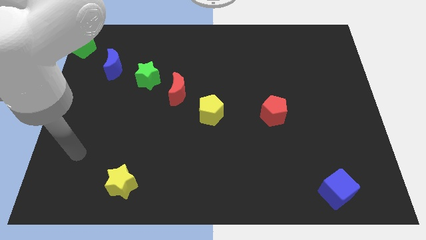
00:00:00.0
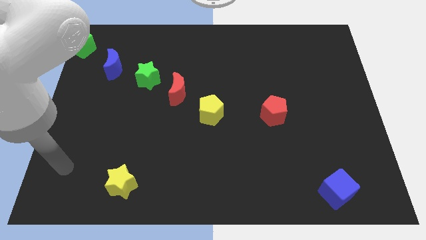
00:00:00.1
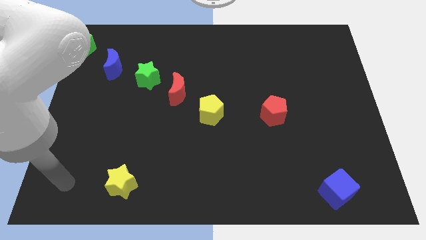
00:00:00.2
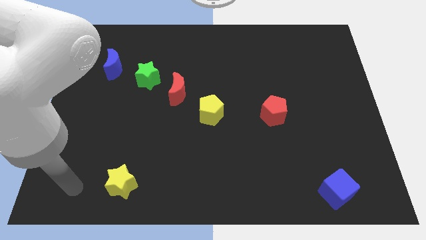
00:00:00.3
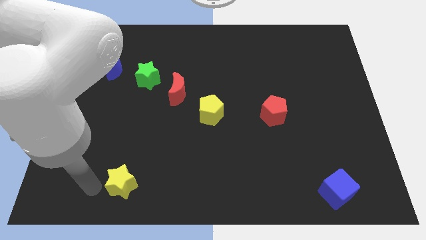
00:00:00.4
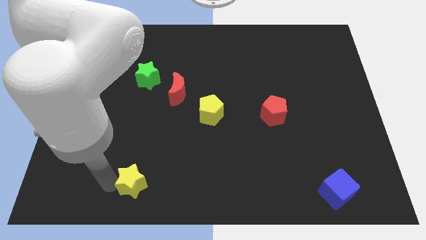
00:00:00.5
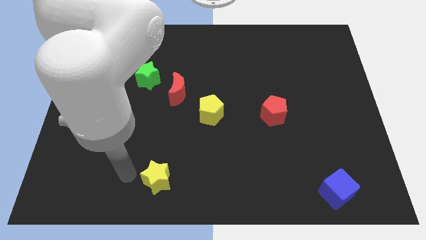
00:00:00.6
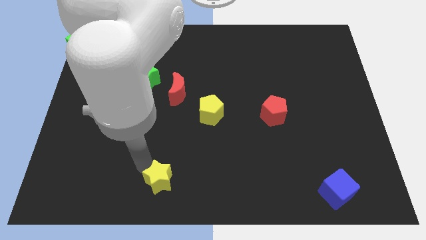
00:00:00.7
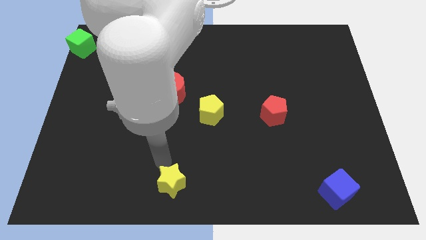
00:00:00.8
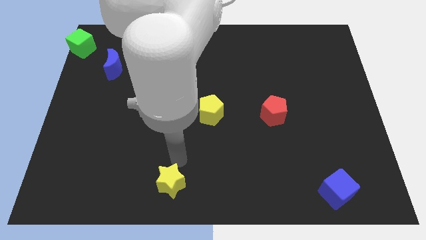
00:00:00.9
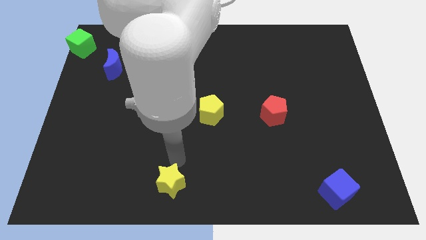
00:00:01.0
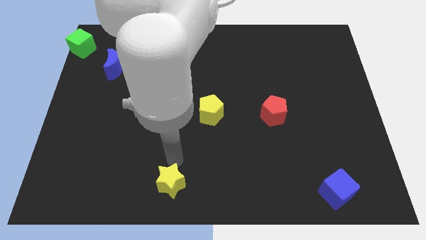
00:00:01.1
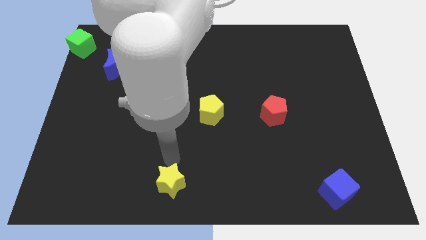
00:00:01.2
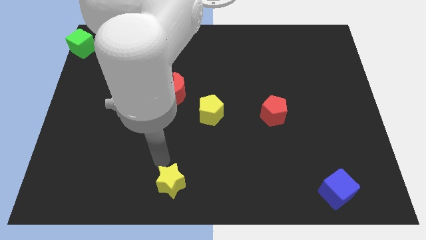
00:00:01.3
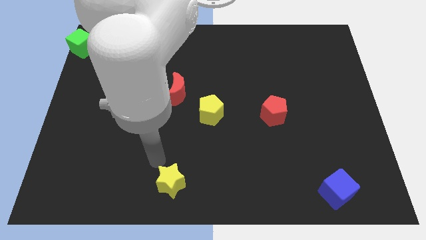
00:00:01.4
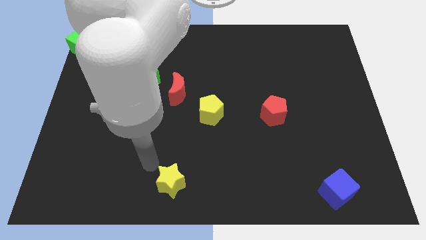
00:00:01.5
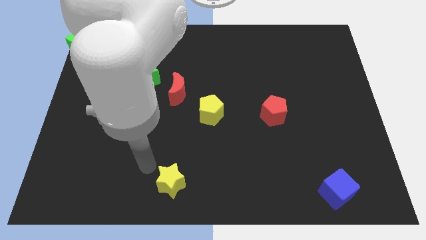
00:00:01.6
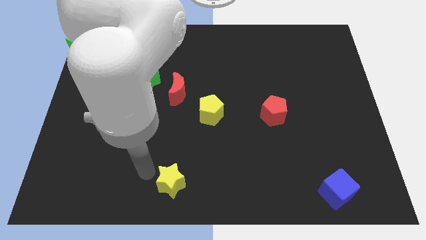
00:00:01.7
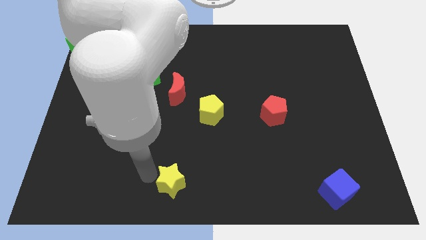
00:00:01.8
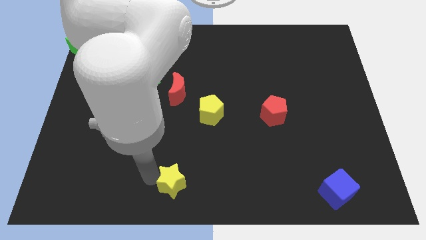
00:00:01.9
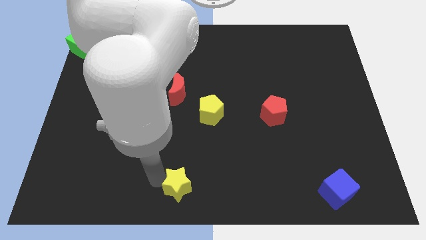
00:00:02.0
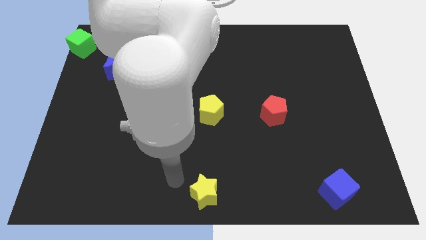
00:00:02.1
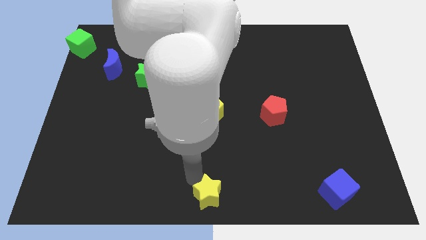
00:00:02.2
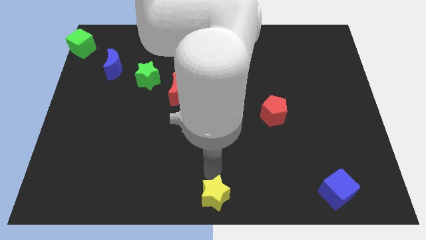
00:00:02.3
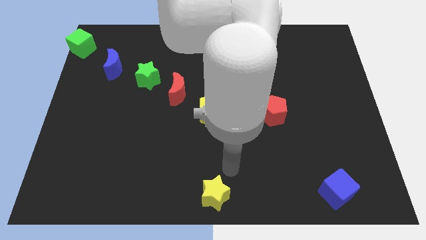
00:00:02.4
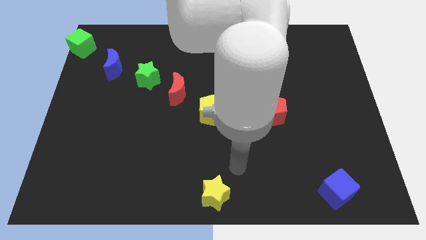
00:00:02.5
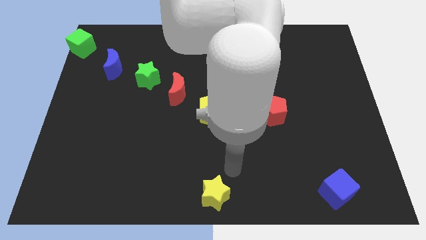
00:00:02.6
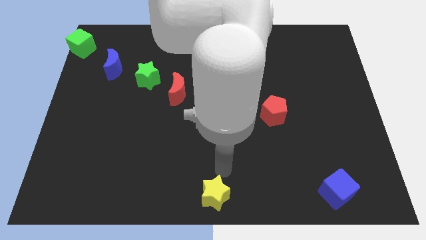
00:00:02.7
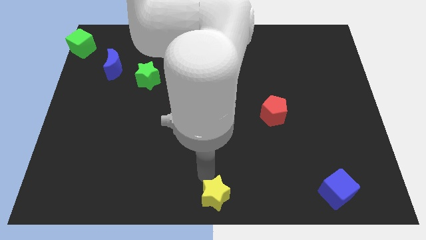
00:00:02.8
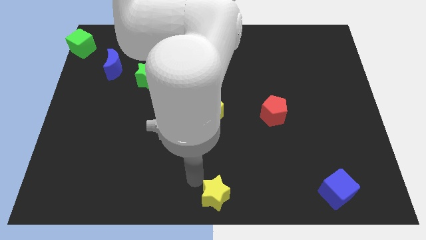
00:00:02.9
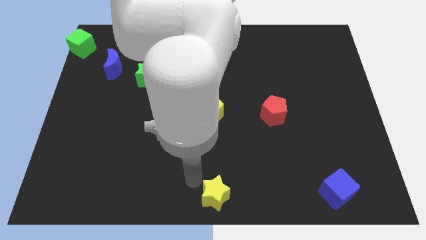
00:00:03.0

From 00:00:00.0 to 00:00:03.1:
move the yellow star to the bottom center

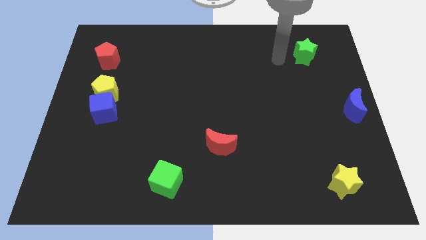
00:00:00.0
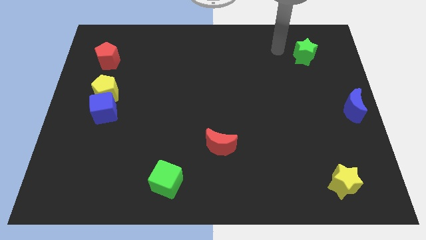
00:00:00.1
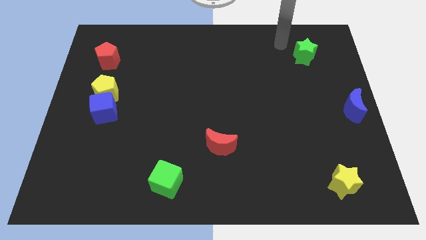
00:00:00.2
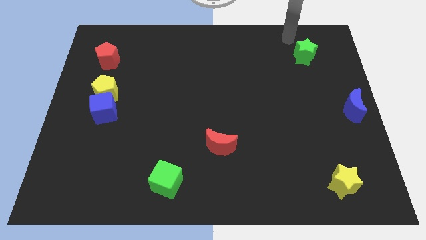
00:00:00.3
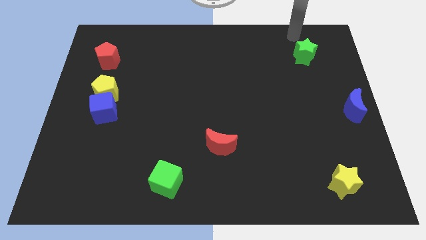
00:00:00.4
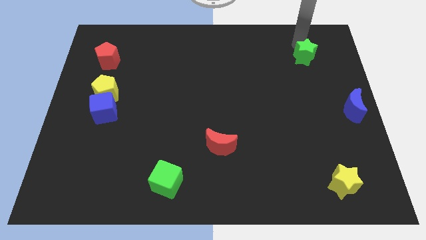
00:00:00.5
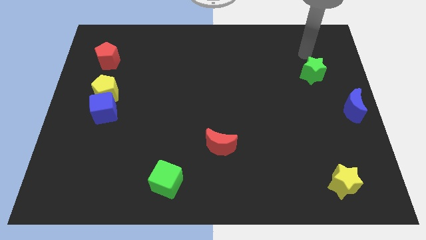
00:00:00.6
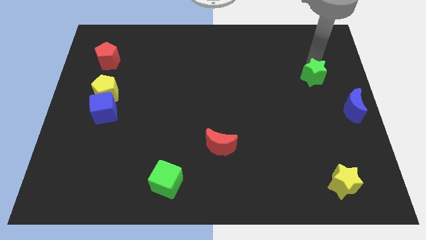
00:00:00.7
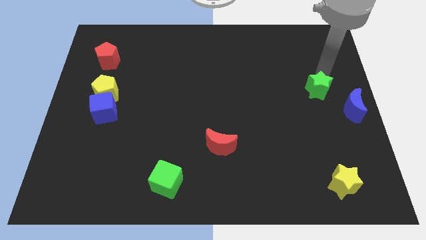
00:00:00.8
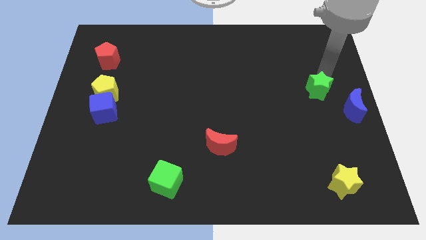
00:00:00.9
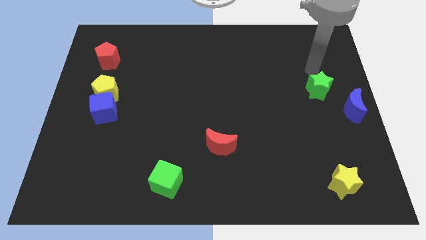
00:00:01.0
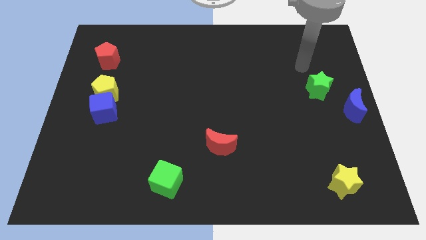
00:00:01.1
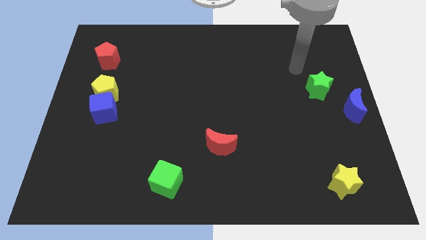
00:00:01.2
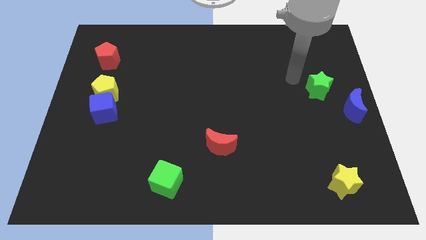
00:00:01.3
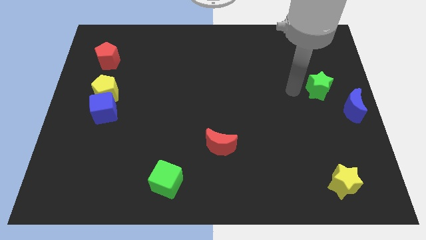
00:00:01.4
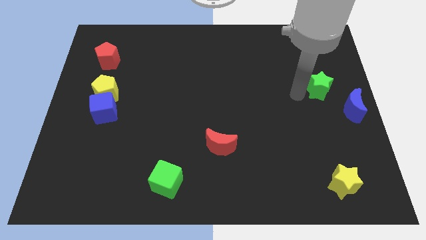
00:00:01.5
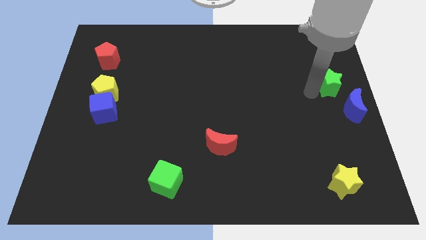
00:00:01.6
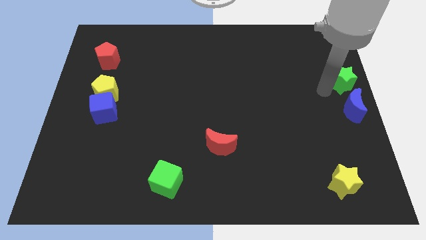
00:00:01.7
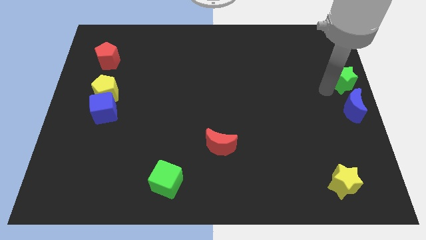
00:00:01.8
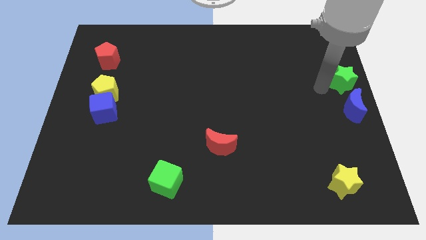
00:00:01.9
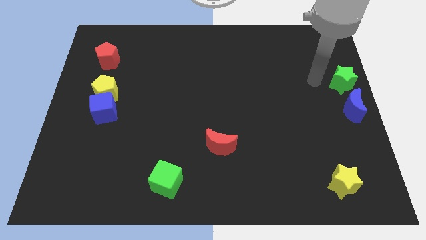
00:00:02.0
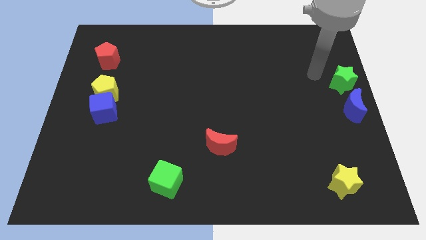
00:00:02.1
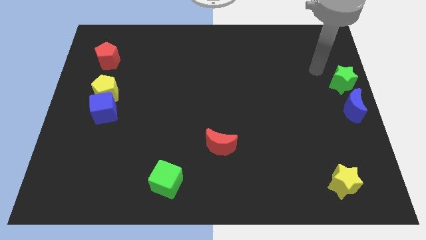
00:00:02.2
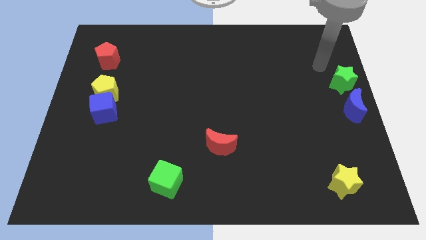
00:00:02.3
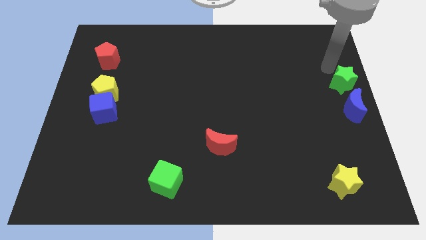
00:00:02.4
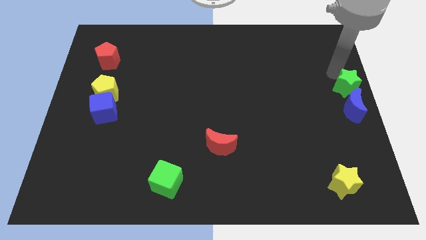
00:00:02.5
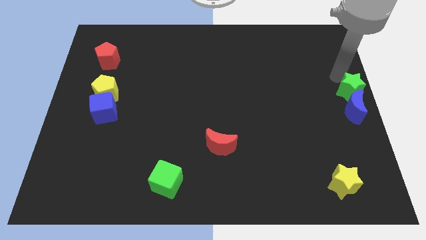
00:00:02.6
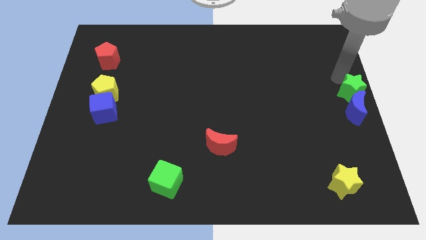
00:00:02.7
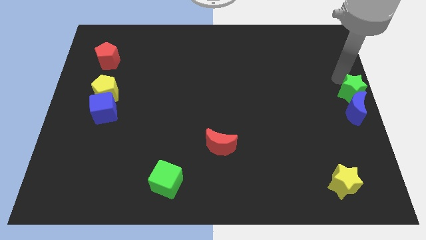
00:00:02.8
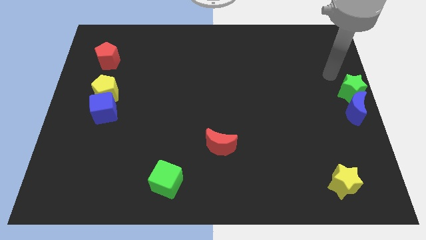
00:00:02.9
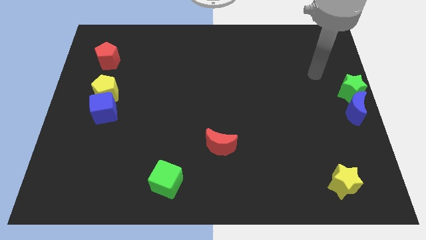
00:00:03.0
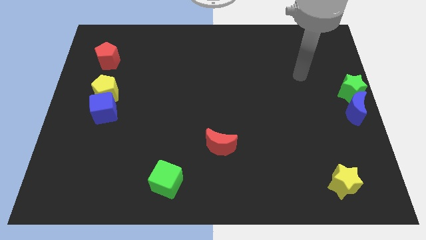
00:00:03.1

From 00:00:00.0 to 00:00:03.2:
push the green star to the top of the blue crescent

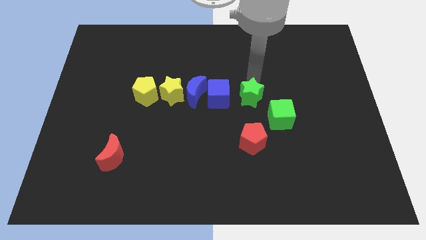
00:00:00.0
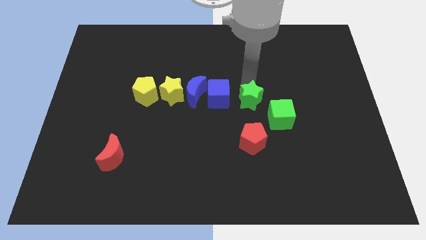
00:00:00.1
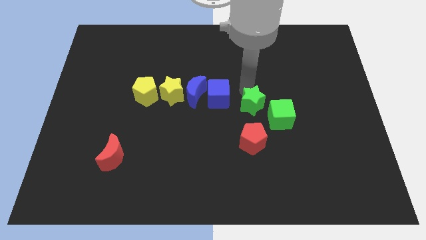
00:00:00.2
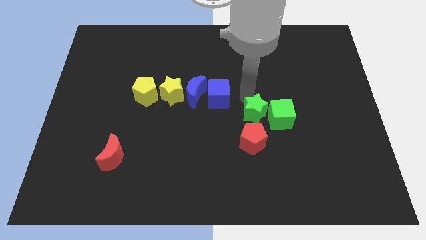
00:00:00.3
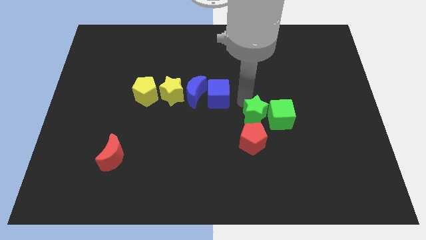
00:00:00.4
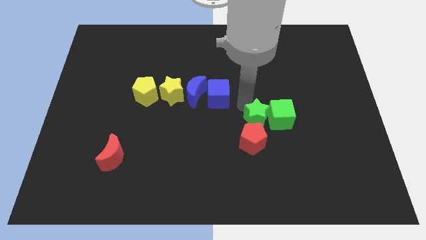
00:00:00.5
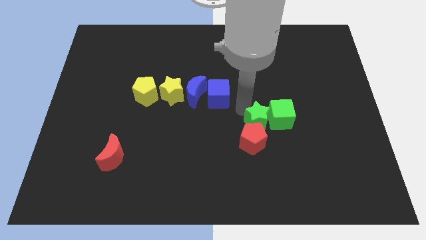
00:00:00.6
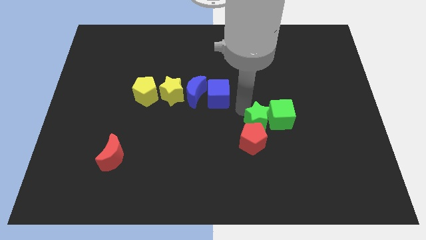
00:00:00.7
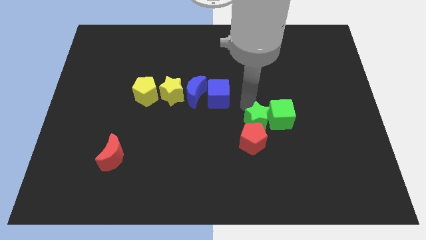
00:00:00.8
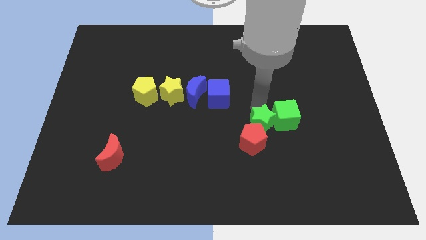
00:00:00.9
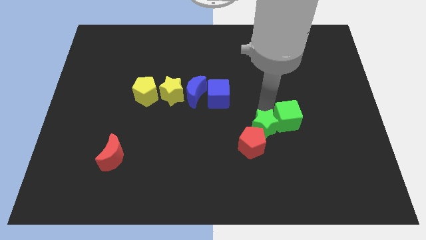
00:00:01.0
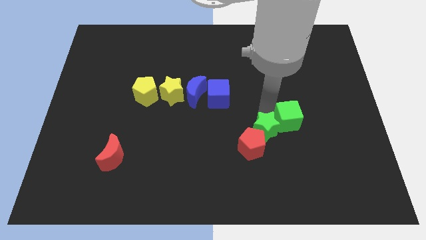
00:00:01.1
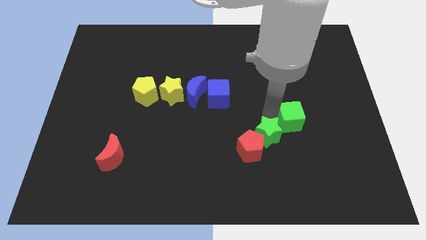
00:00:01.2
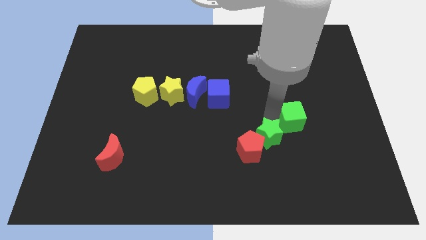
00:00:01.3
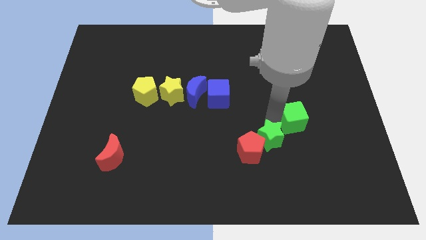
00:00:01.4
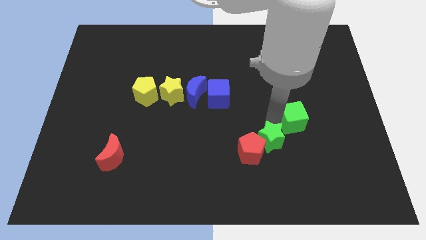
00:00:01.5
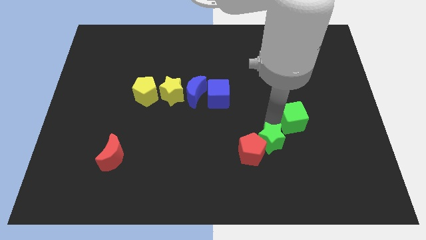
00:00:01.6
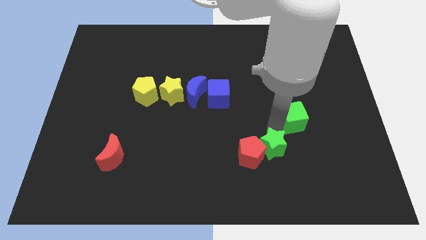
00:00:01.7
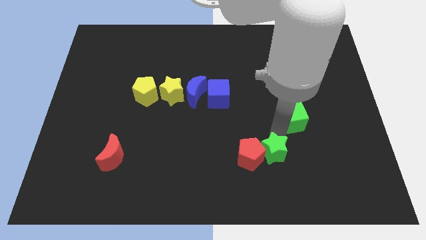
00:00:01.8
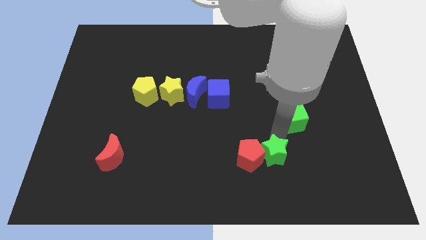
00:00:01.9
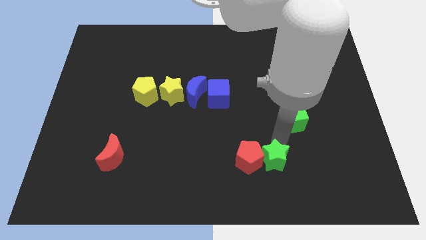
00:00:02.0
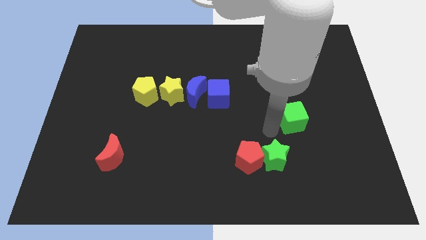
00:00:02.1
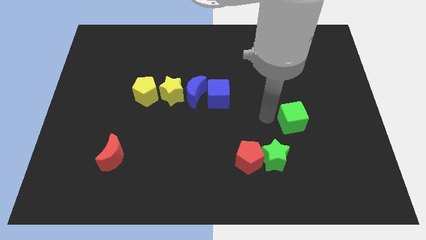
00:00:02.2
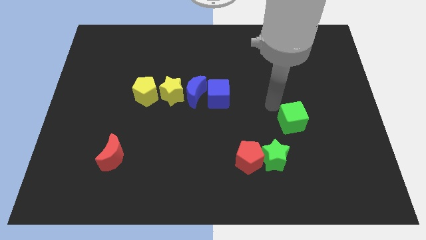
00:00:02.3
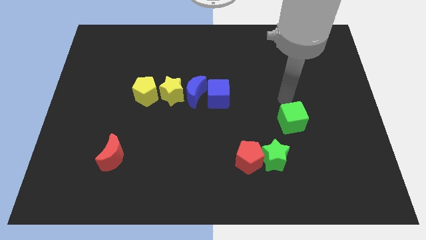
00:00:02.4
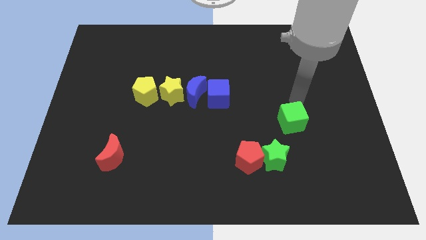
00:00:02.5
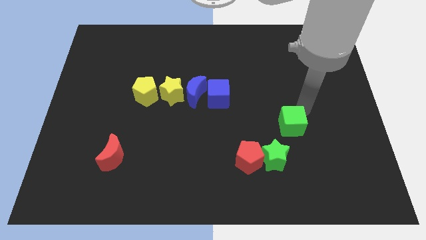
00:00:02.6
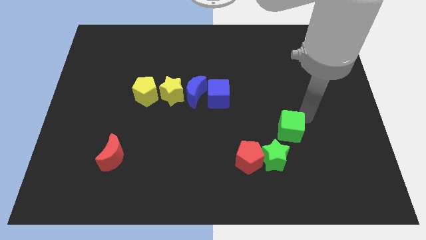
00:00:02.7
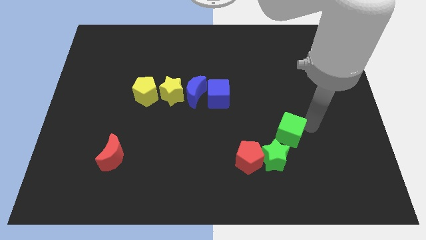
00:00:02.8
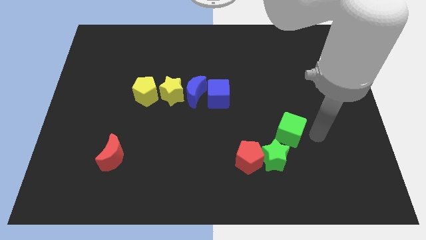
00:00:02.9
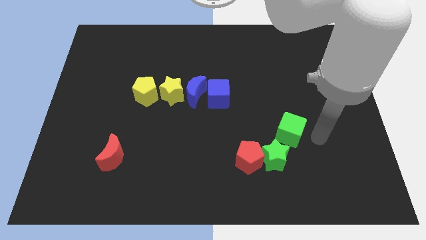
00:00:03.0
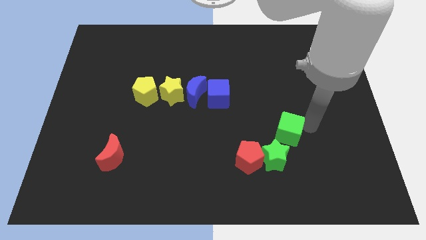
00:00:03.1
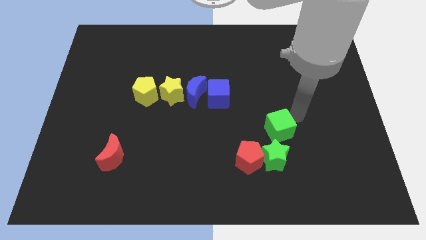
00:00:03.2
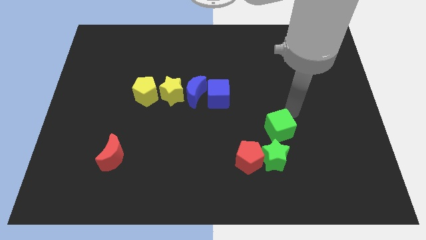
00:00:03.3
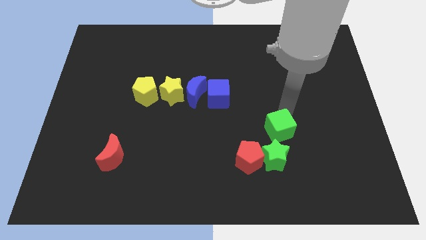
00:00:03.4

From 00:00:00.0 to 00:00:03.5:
place green star and green cube towards the red pentagon
